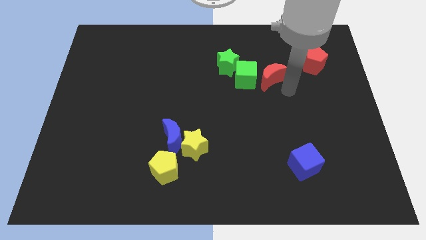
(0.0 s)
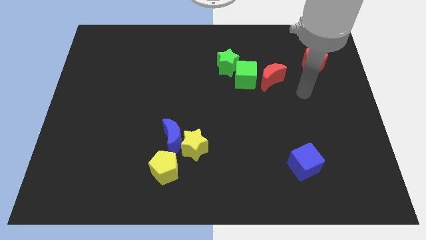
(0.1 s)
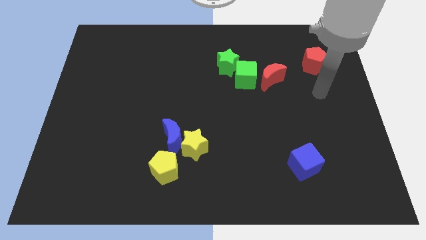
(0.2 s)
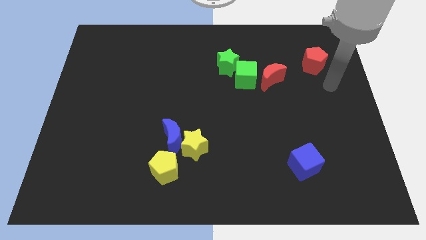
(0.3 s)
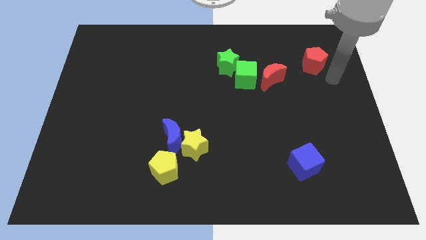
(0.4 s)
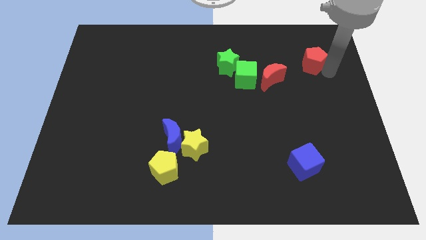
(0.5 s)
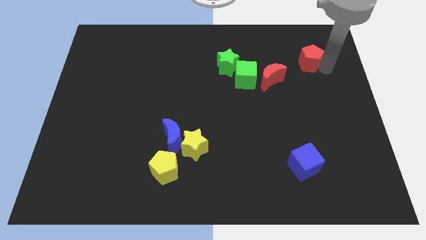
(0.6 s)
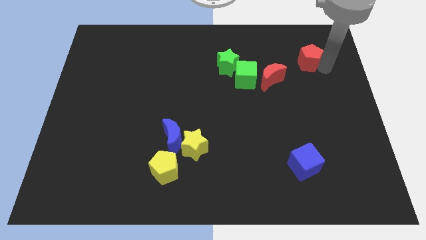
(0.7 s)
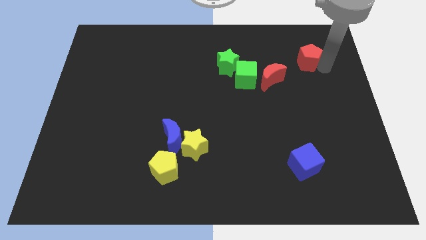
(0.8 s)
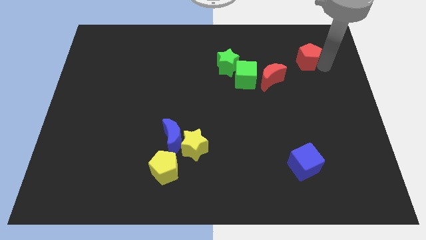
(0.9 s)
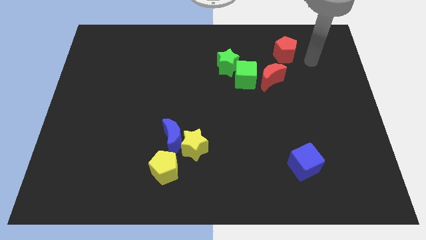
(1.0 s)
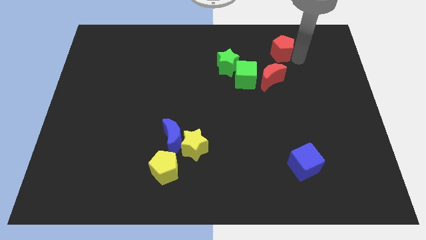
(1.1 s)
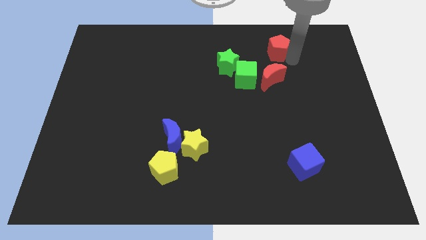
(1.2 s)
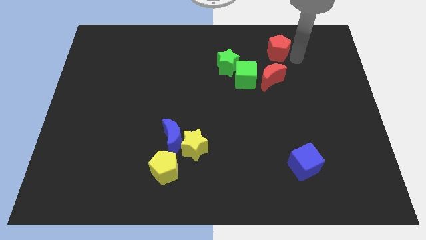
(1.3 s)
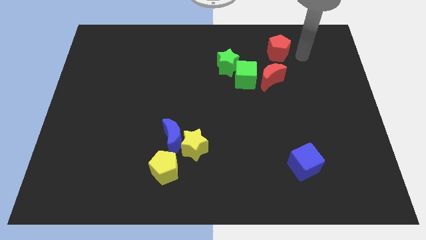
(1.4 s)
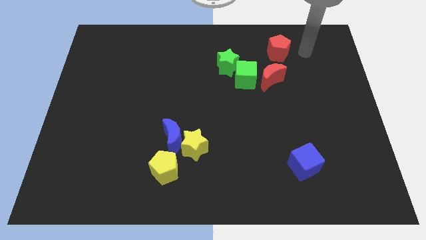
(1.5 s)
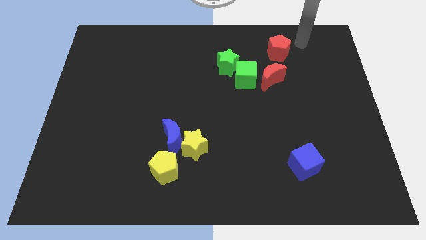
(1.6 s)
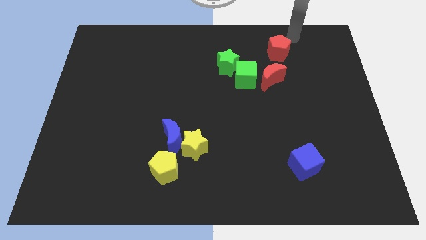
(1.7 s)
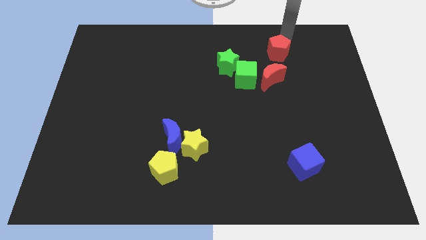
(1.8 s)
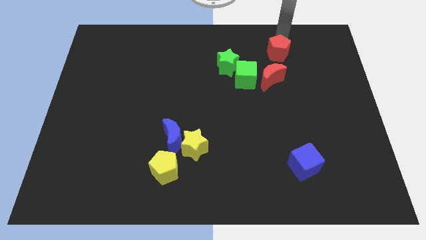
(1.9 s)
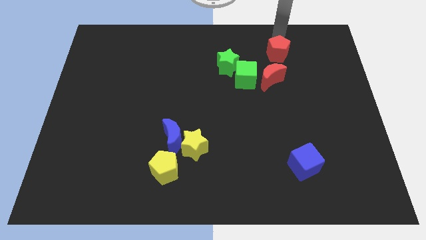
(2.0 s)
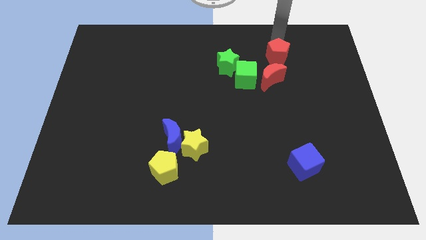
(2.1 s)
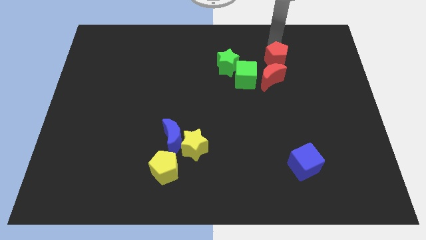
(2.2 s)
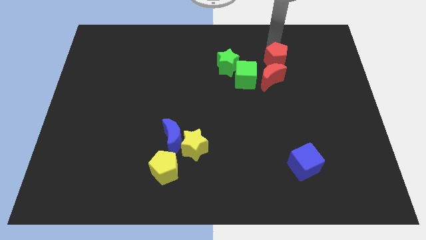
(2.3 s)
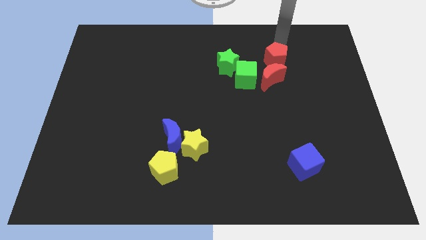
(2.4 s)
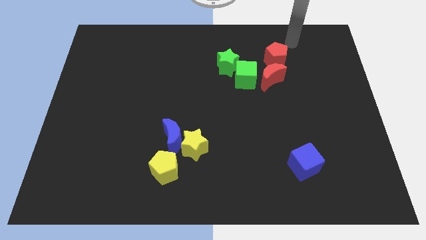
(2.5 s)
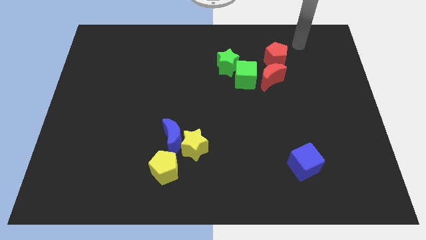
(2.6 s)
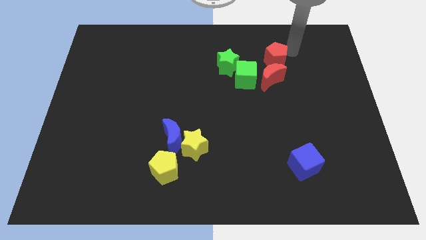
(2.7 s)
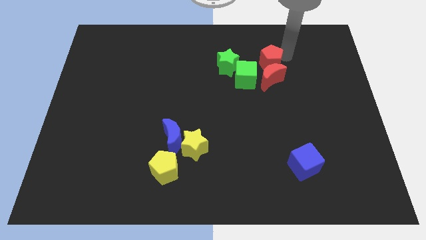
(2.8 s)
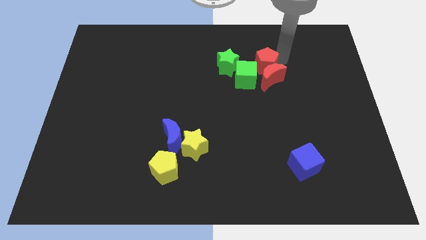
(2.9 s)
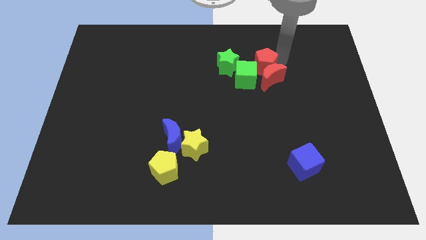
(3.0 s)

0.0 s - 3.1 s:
place red pentagon above the red moon

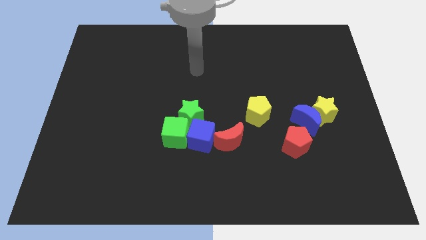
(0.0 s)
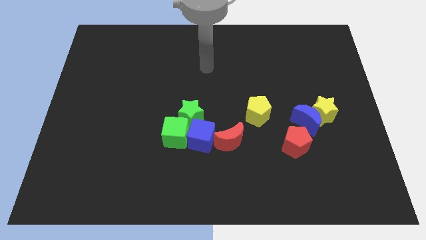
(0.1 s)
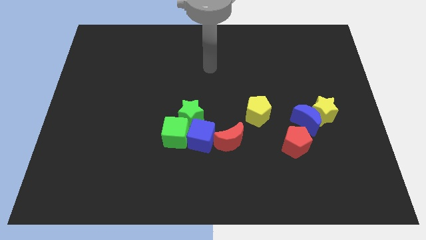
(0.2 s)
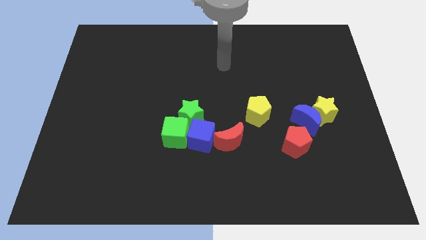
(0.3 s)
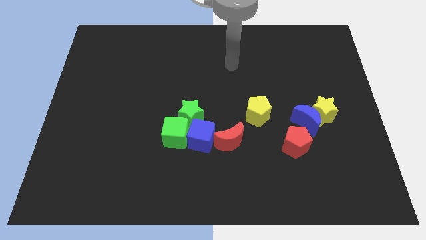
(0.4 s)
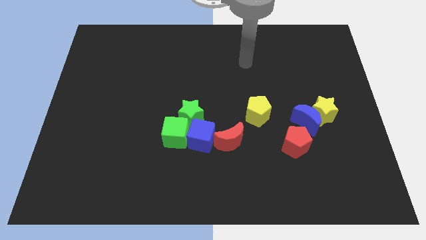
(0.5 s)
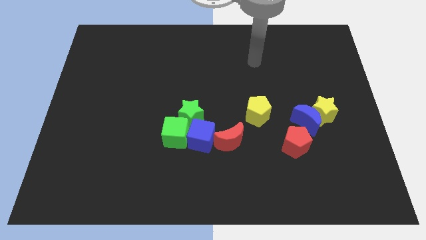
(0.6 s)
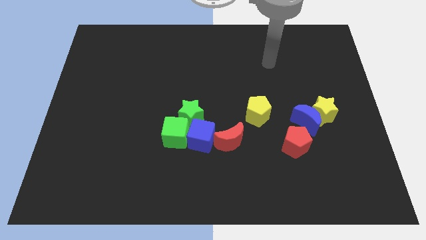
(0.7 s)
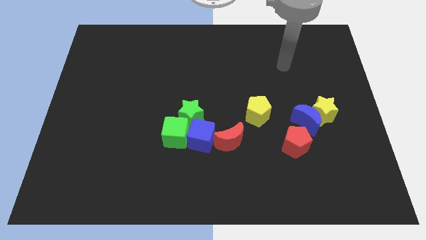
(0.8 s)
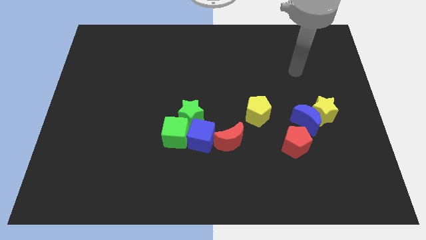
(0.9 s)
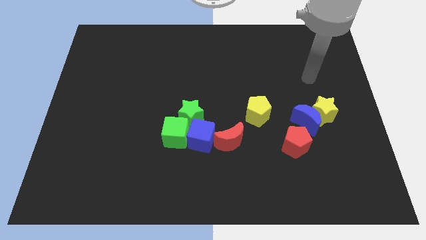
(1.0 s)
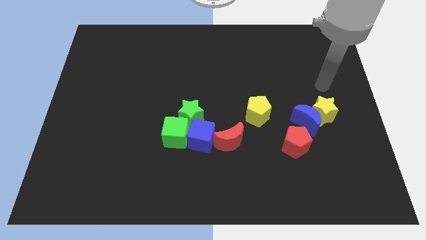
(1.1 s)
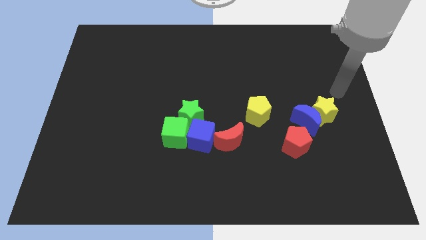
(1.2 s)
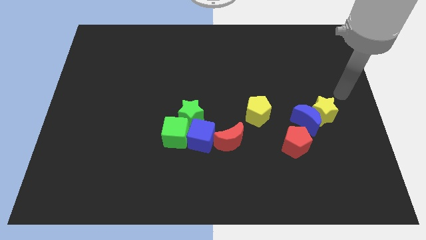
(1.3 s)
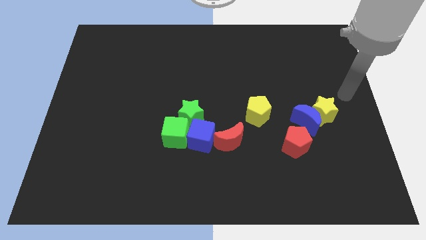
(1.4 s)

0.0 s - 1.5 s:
point your hand at the top right side of the yellow star

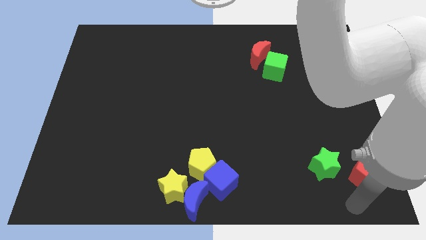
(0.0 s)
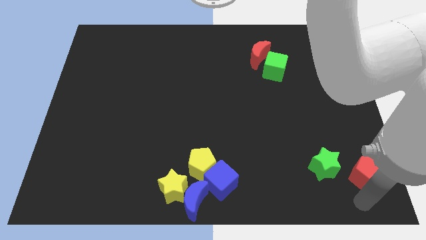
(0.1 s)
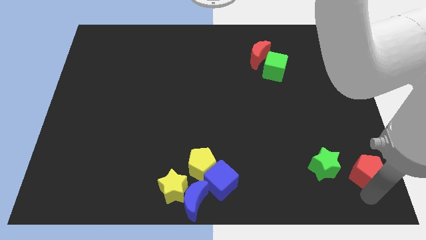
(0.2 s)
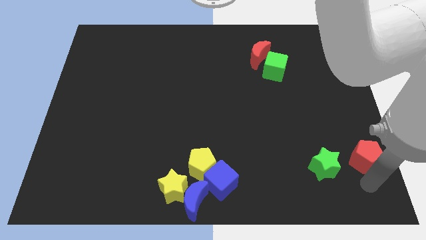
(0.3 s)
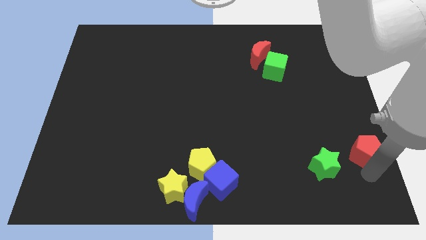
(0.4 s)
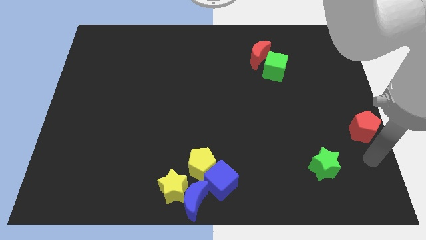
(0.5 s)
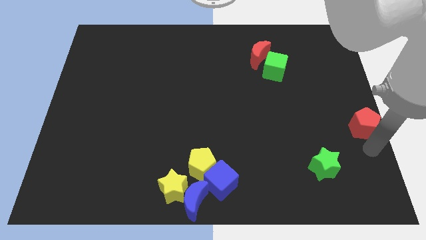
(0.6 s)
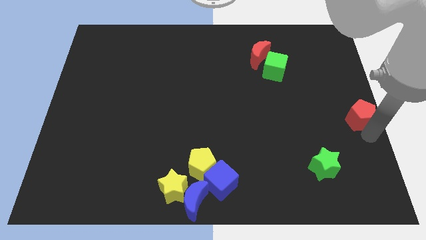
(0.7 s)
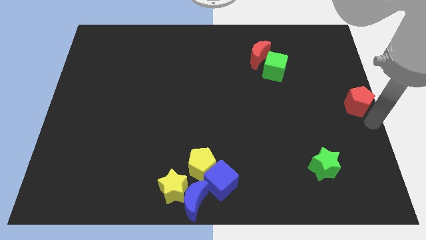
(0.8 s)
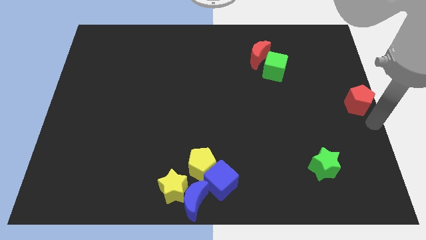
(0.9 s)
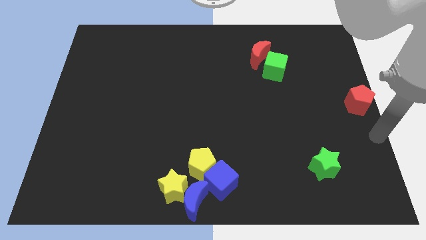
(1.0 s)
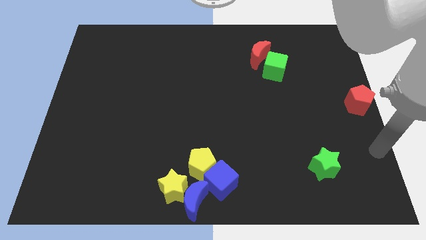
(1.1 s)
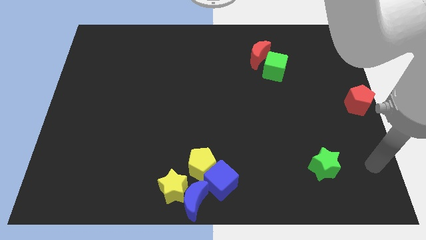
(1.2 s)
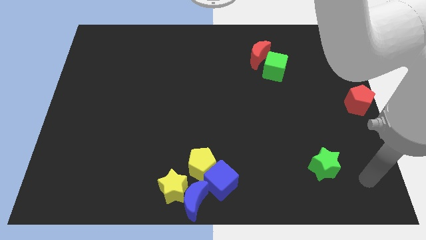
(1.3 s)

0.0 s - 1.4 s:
move yellow pentagon slightly to the top side of the board

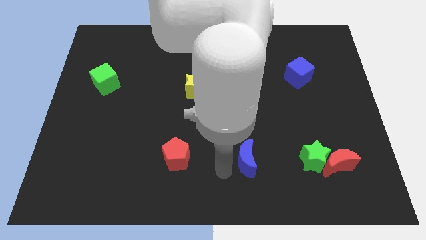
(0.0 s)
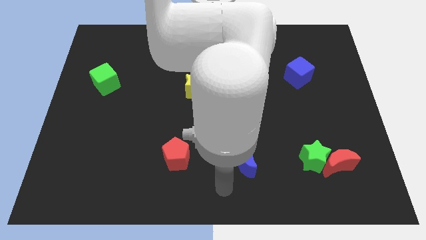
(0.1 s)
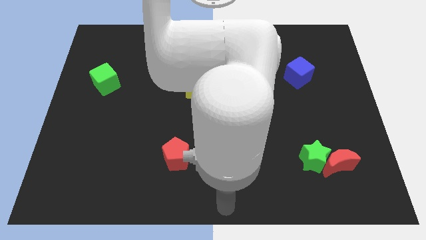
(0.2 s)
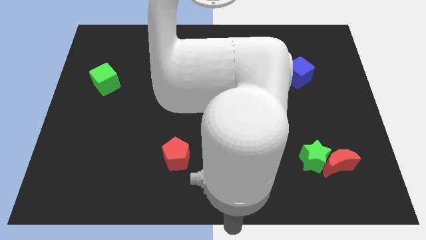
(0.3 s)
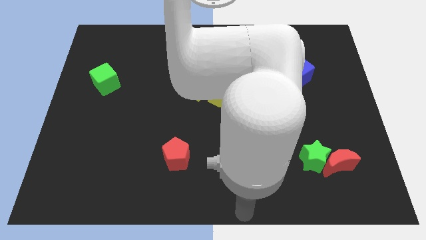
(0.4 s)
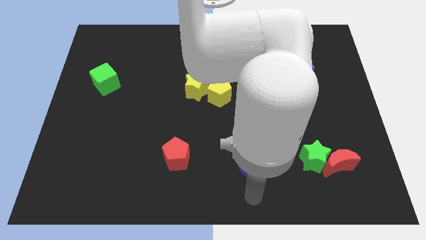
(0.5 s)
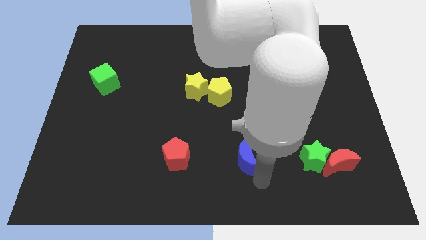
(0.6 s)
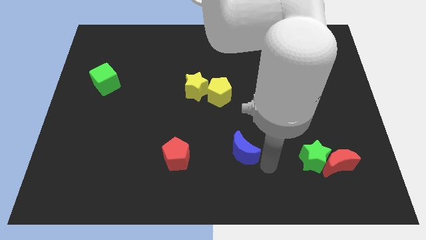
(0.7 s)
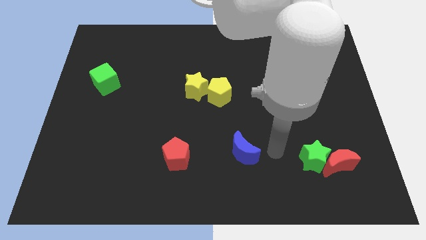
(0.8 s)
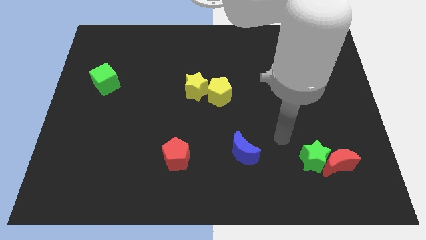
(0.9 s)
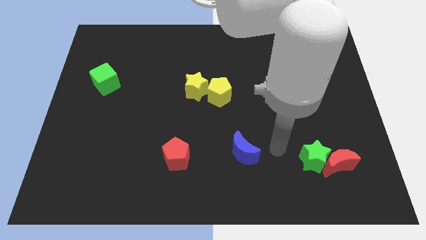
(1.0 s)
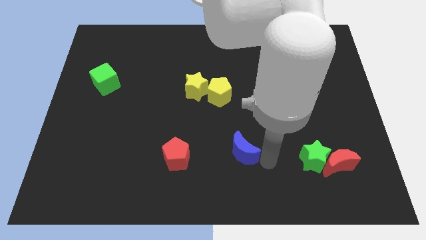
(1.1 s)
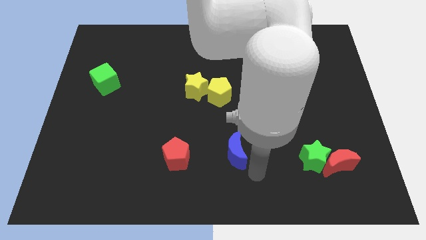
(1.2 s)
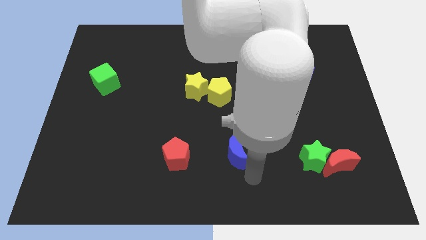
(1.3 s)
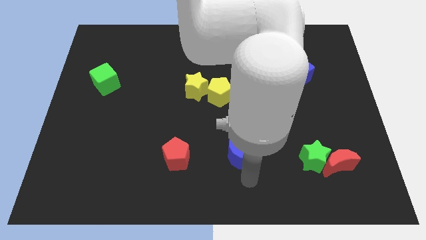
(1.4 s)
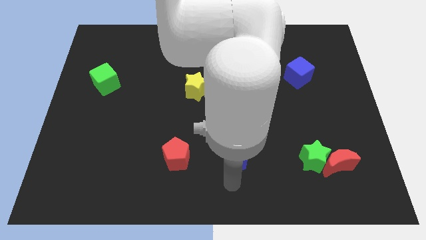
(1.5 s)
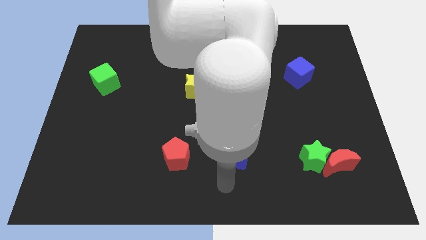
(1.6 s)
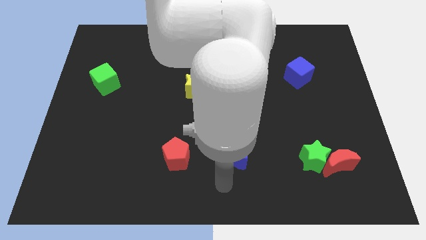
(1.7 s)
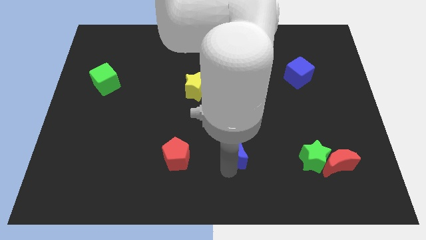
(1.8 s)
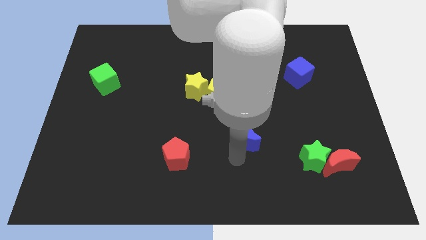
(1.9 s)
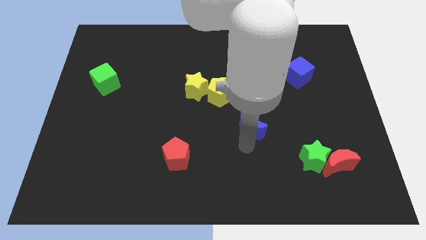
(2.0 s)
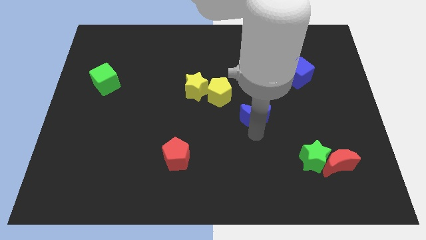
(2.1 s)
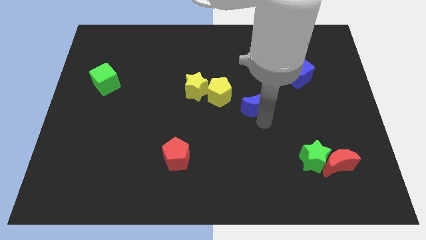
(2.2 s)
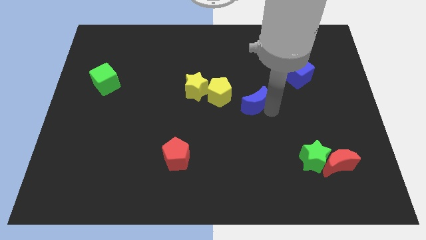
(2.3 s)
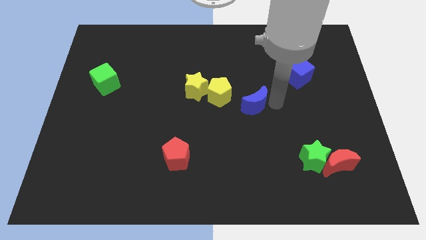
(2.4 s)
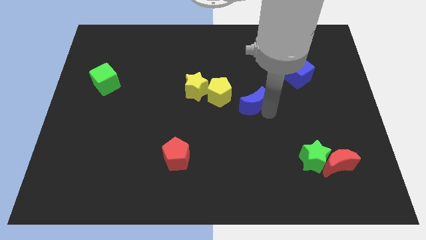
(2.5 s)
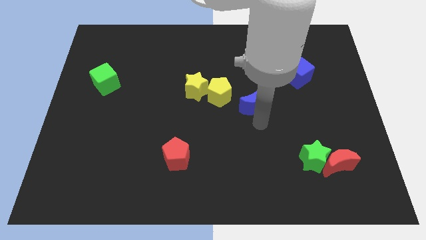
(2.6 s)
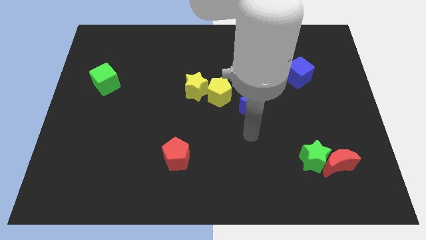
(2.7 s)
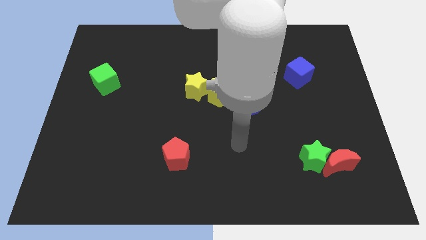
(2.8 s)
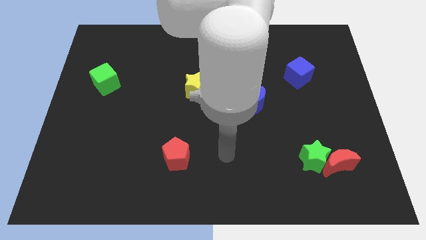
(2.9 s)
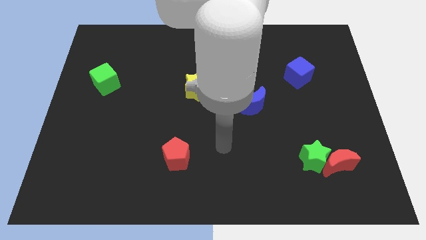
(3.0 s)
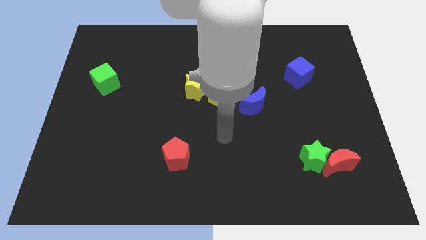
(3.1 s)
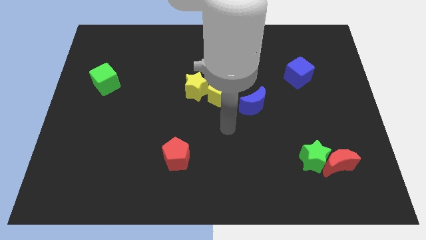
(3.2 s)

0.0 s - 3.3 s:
move the blue crescent to the center of the board
